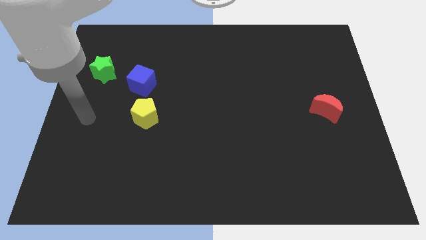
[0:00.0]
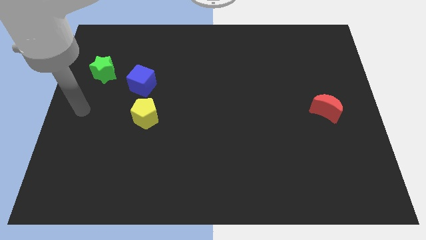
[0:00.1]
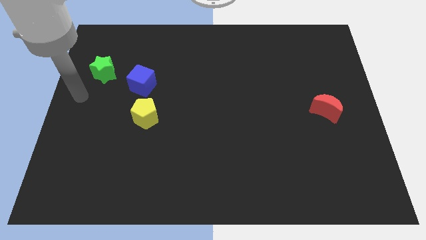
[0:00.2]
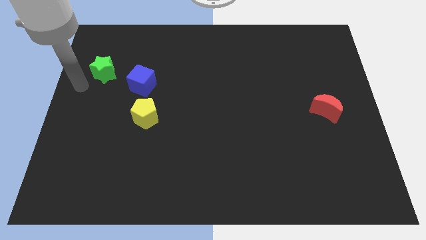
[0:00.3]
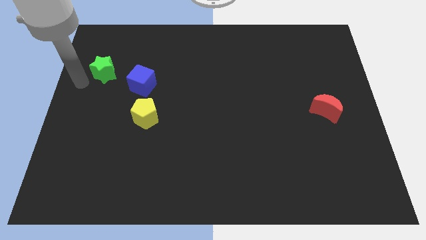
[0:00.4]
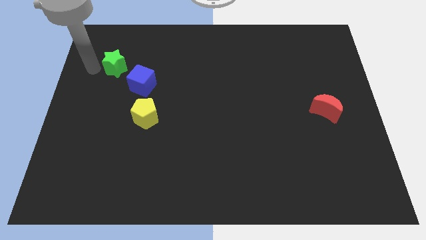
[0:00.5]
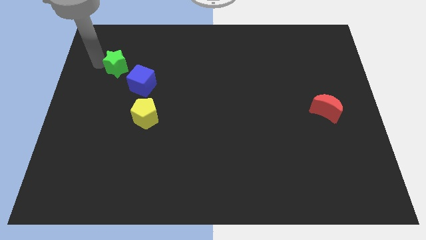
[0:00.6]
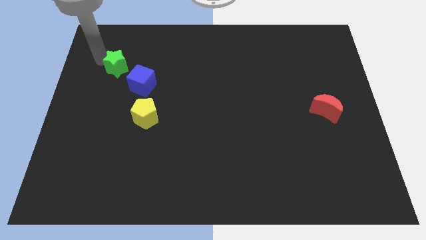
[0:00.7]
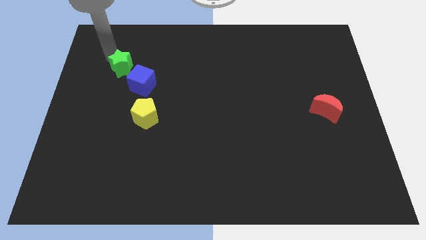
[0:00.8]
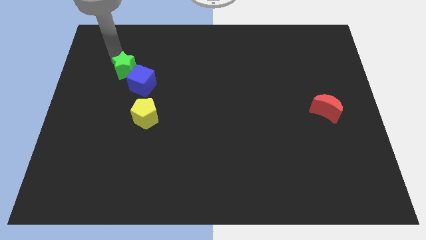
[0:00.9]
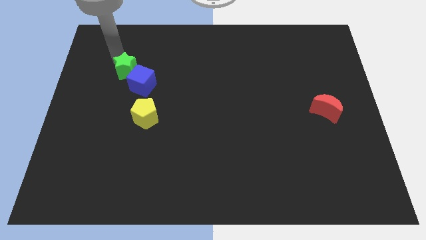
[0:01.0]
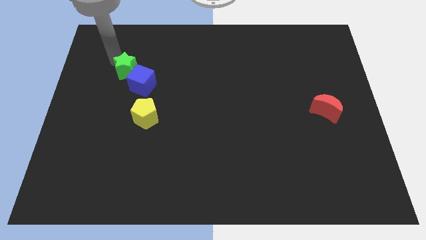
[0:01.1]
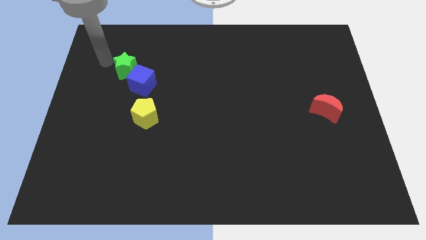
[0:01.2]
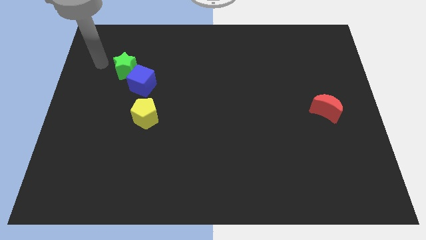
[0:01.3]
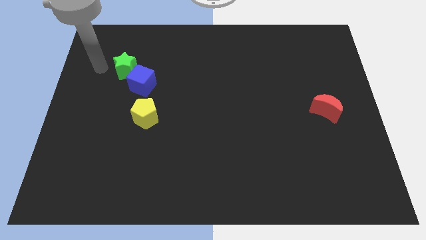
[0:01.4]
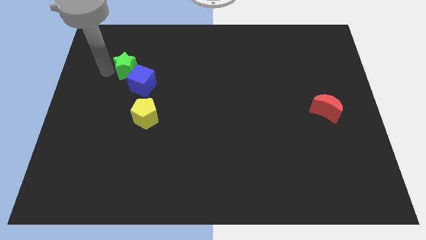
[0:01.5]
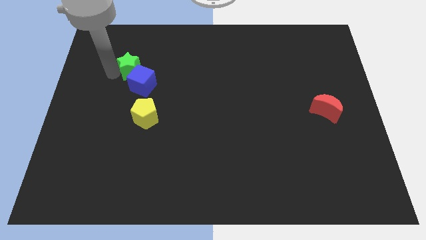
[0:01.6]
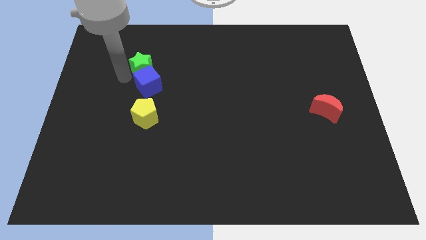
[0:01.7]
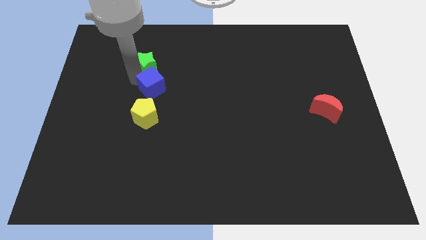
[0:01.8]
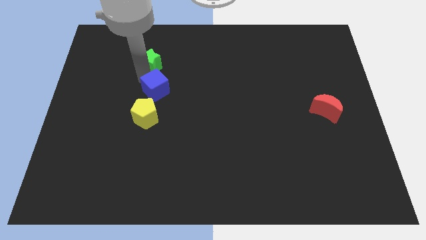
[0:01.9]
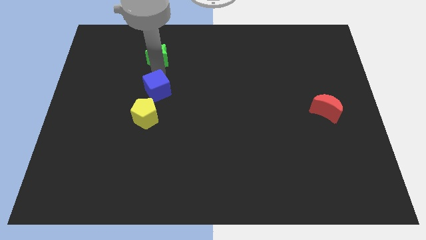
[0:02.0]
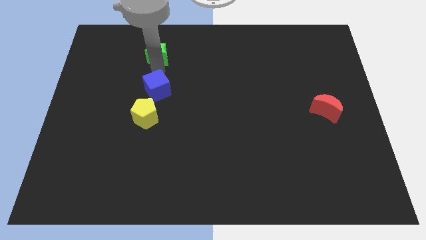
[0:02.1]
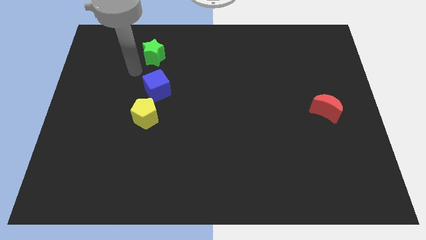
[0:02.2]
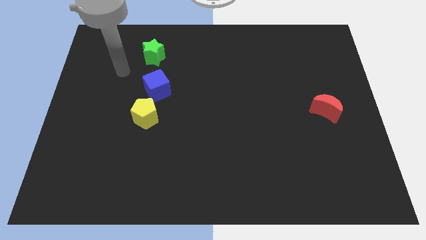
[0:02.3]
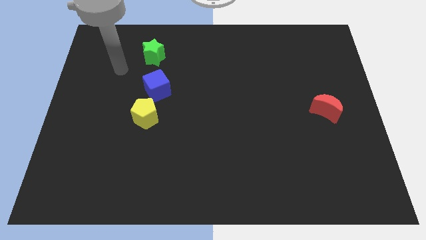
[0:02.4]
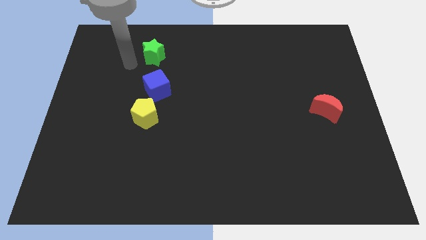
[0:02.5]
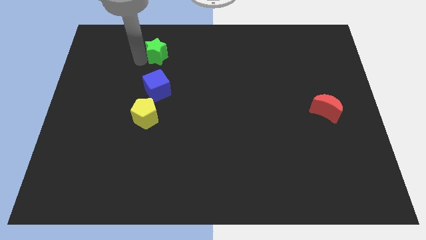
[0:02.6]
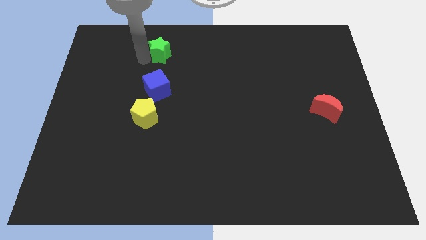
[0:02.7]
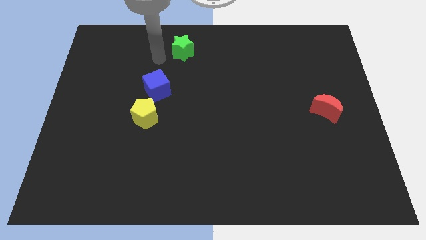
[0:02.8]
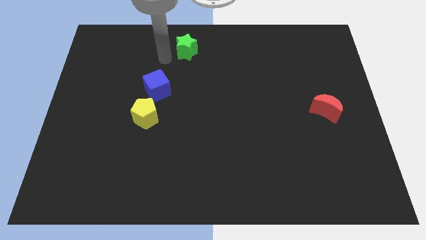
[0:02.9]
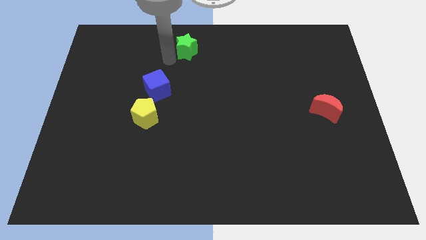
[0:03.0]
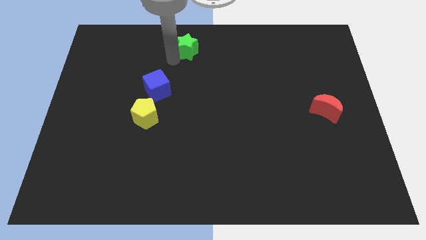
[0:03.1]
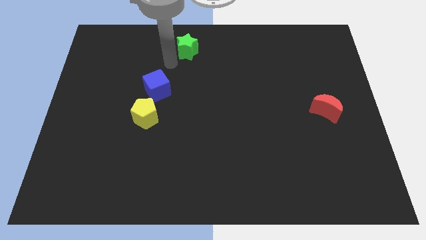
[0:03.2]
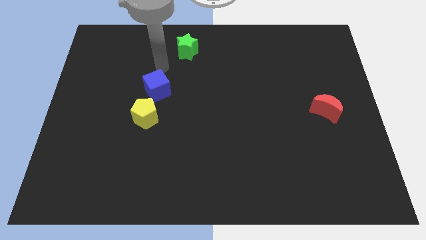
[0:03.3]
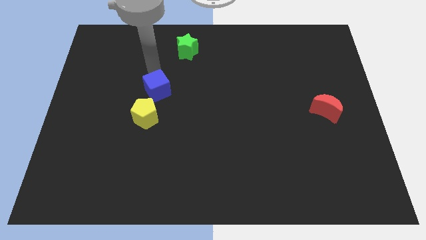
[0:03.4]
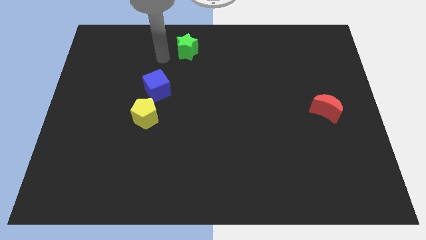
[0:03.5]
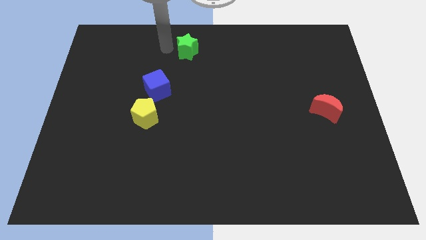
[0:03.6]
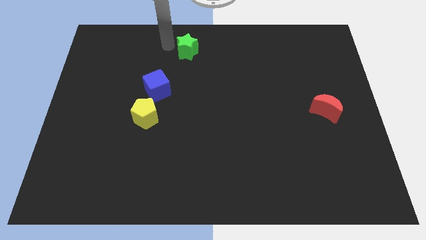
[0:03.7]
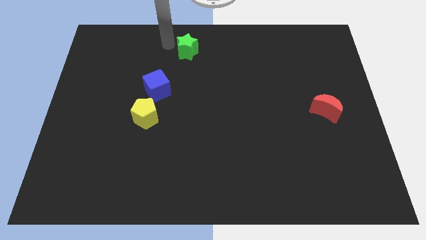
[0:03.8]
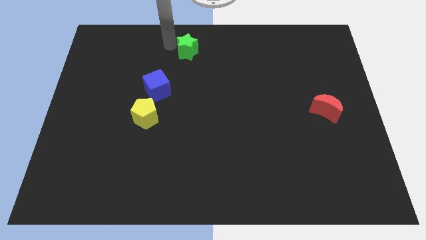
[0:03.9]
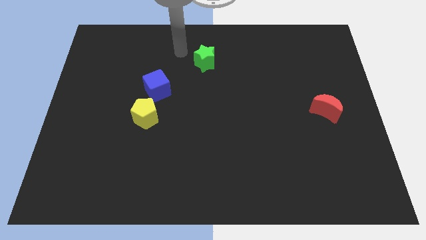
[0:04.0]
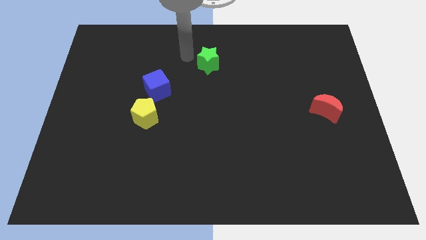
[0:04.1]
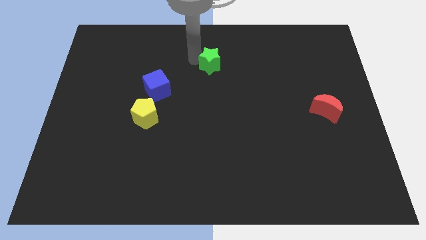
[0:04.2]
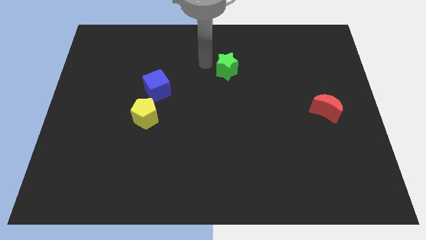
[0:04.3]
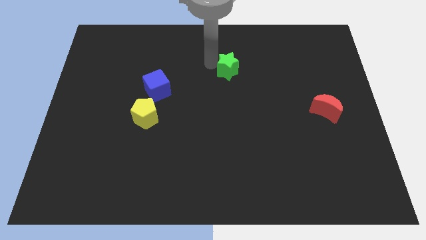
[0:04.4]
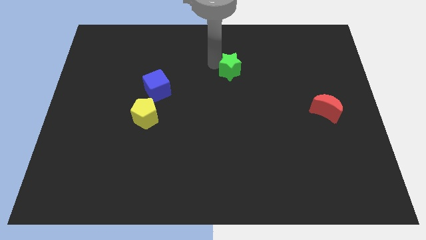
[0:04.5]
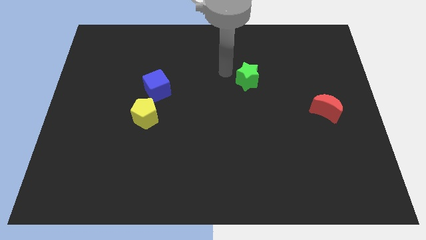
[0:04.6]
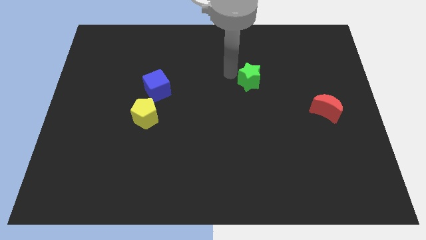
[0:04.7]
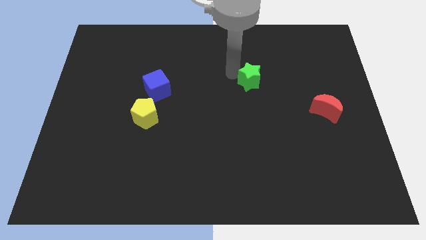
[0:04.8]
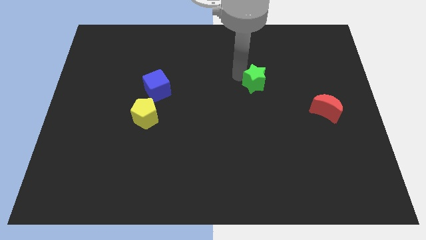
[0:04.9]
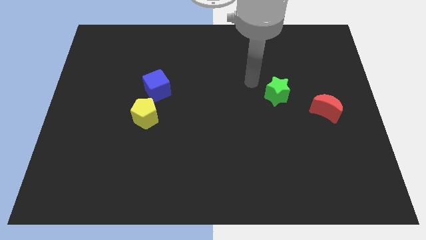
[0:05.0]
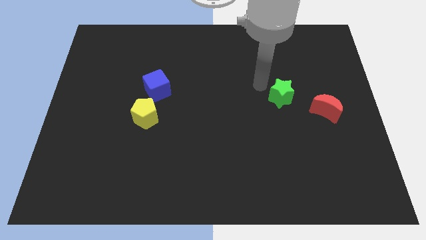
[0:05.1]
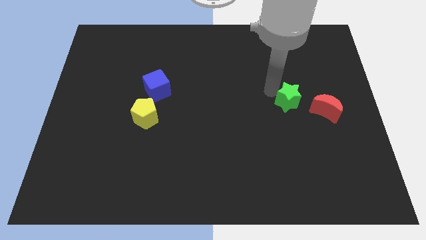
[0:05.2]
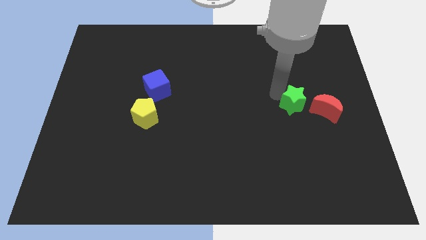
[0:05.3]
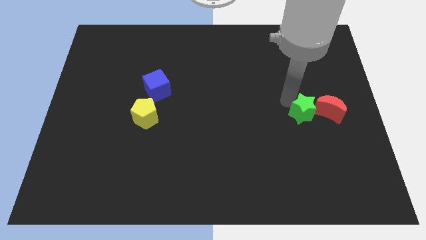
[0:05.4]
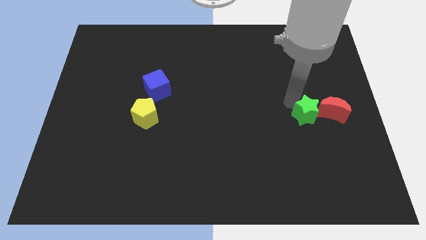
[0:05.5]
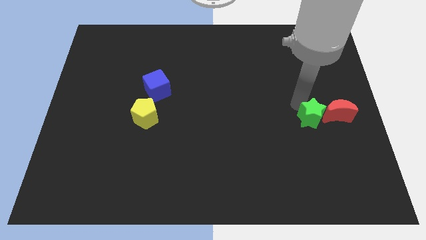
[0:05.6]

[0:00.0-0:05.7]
push the green block close to the moon

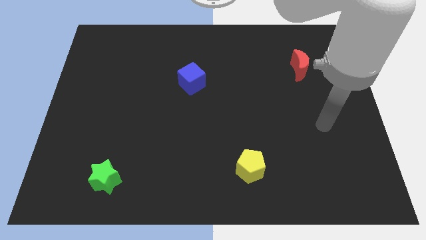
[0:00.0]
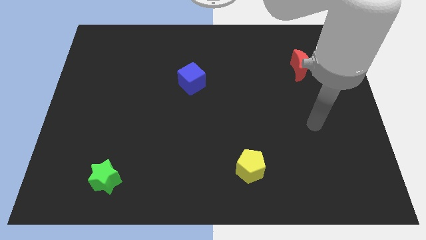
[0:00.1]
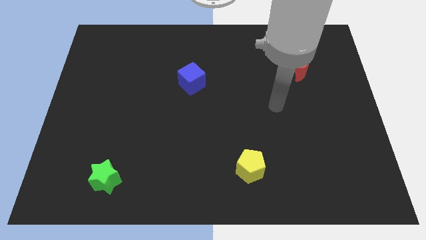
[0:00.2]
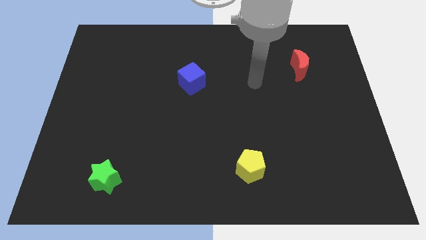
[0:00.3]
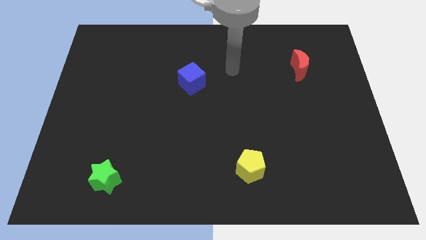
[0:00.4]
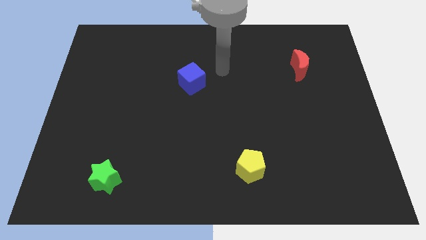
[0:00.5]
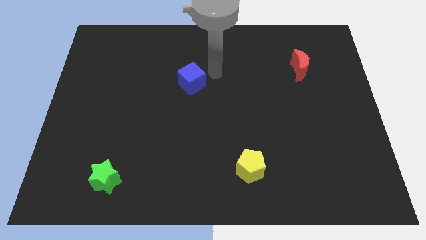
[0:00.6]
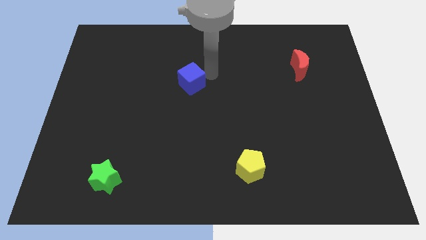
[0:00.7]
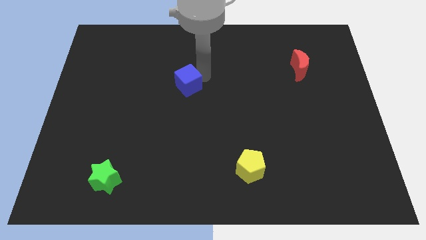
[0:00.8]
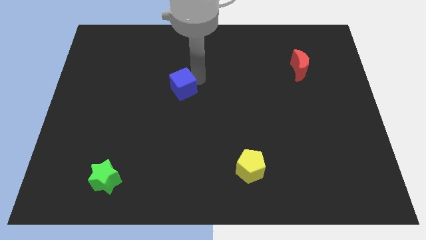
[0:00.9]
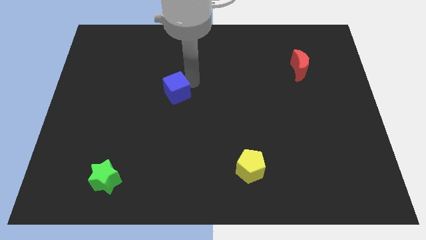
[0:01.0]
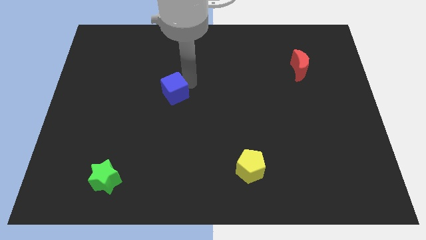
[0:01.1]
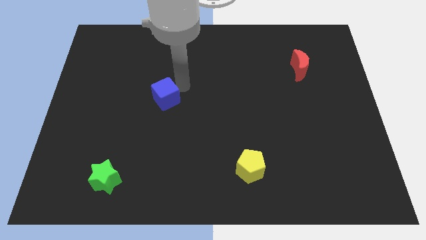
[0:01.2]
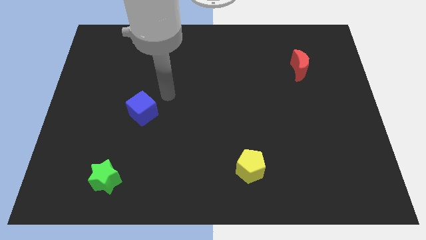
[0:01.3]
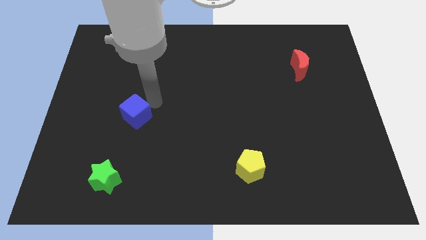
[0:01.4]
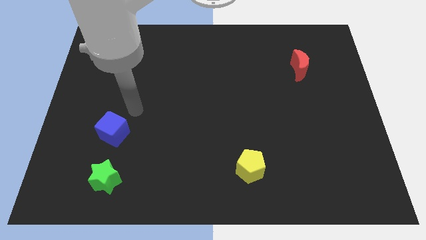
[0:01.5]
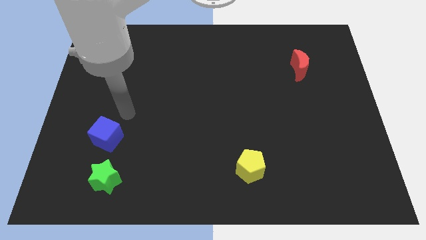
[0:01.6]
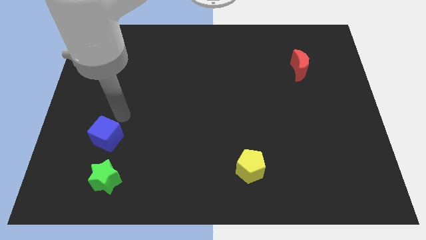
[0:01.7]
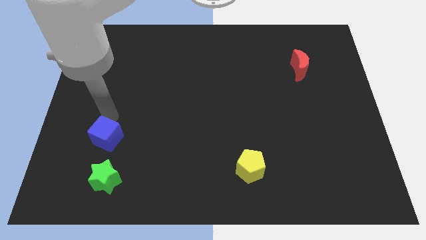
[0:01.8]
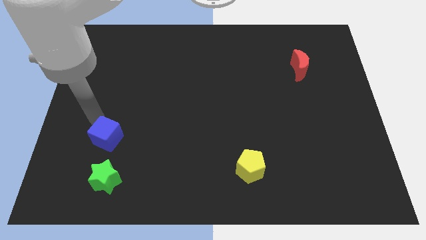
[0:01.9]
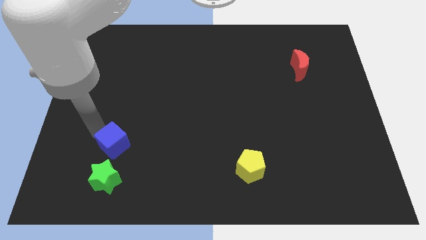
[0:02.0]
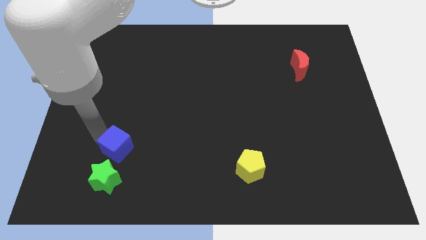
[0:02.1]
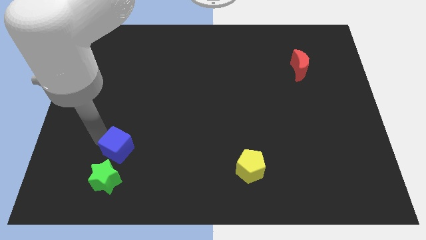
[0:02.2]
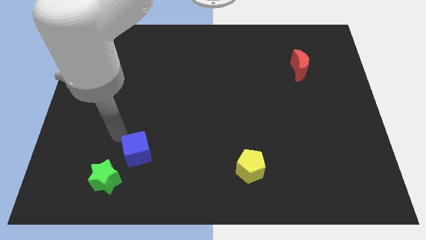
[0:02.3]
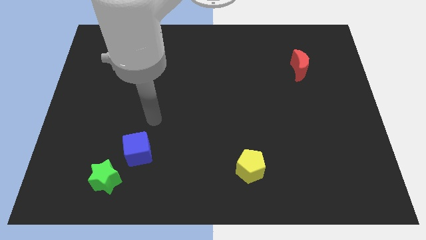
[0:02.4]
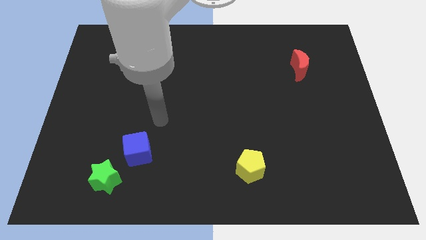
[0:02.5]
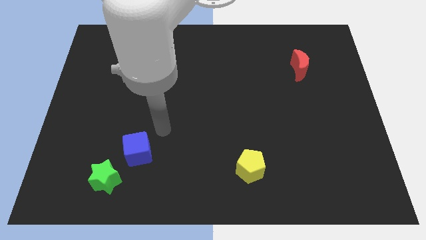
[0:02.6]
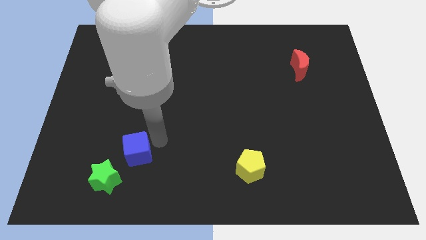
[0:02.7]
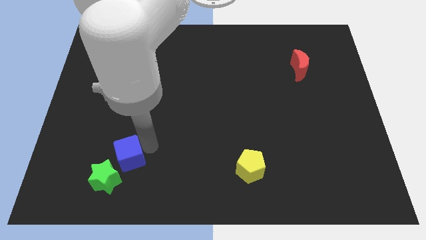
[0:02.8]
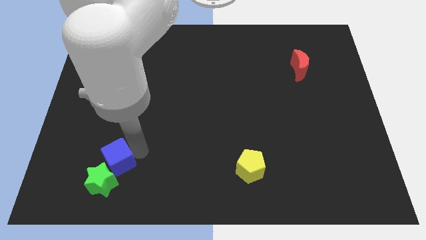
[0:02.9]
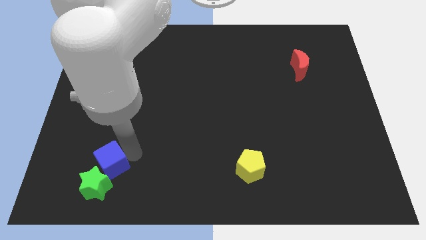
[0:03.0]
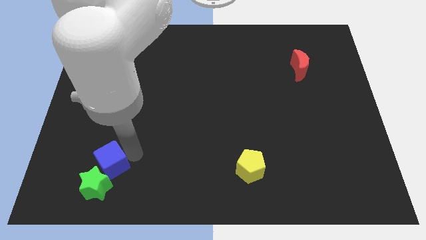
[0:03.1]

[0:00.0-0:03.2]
move the cube to the green star
